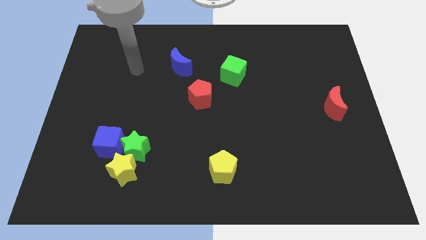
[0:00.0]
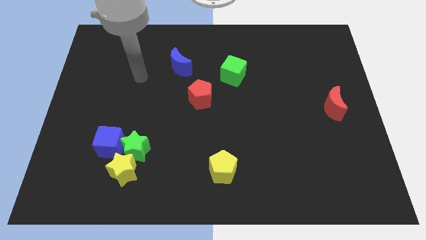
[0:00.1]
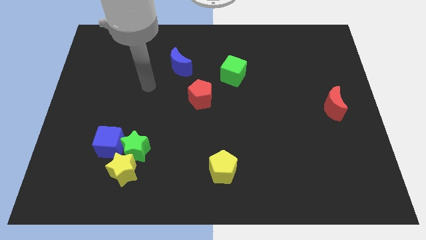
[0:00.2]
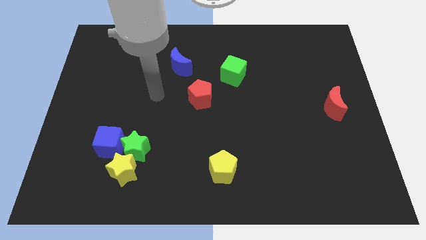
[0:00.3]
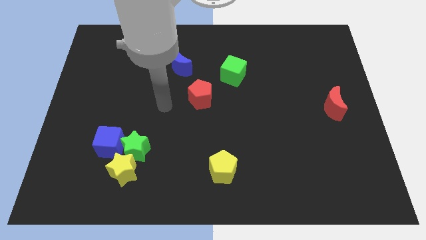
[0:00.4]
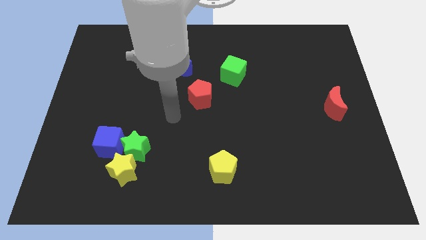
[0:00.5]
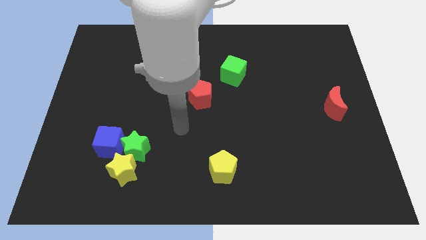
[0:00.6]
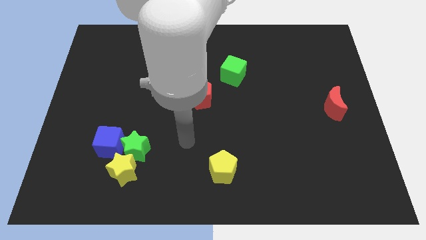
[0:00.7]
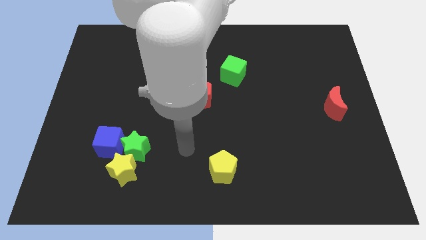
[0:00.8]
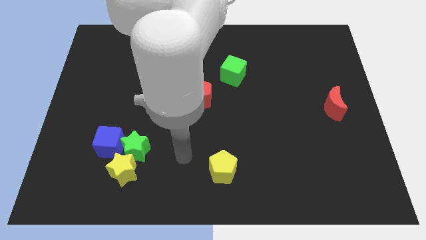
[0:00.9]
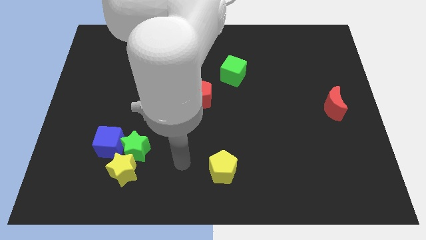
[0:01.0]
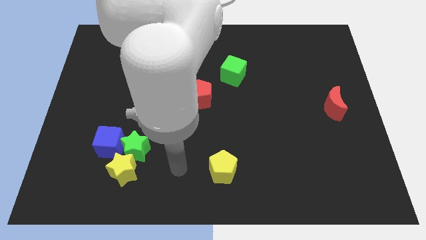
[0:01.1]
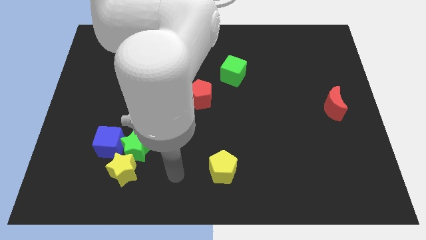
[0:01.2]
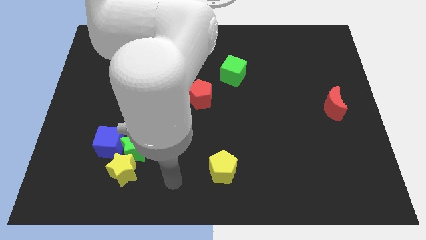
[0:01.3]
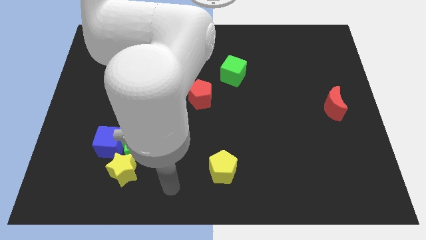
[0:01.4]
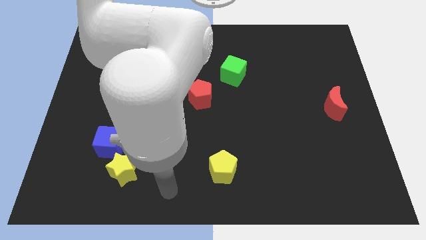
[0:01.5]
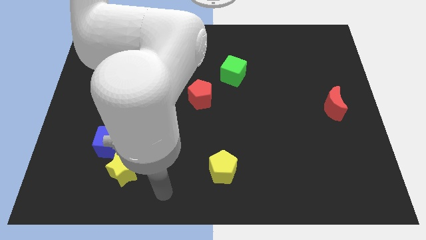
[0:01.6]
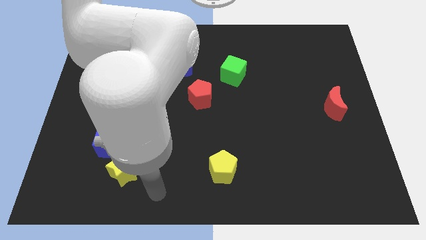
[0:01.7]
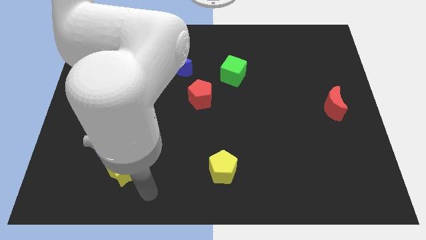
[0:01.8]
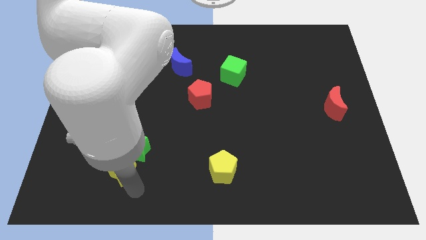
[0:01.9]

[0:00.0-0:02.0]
move your arm to the bottom of the yellow star

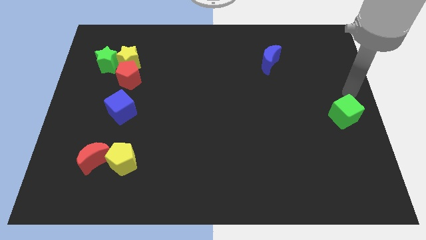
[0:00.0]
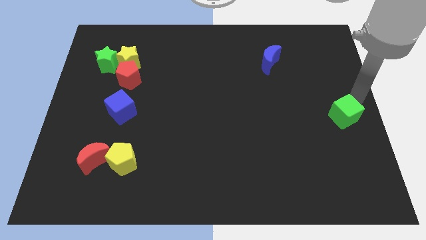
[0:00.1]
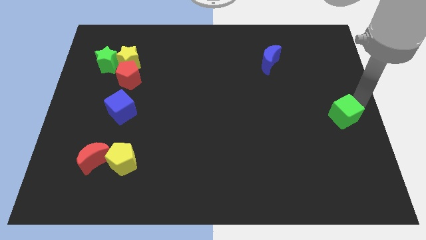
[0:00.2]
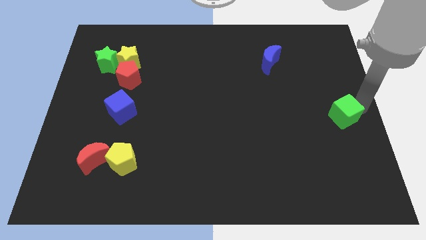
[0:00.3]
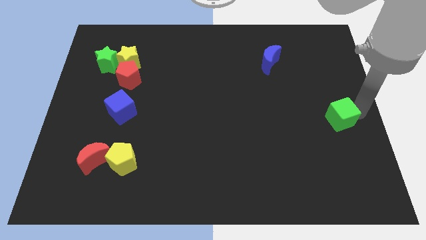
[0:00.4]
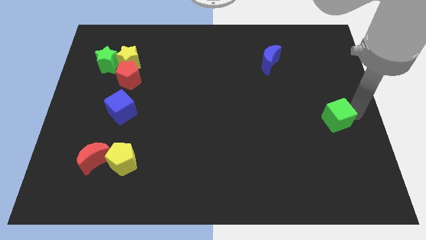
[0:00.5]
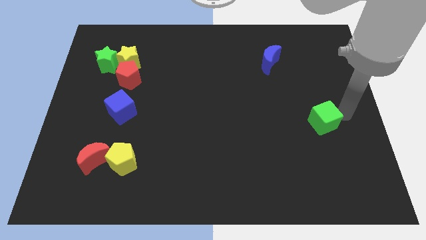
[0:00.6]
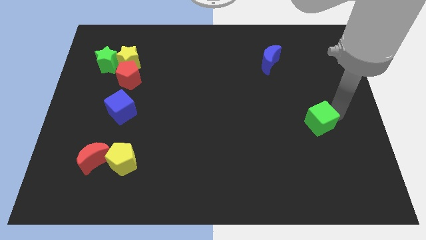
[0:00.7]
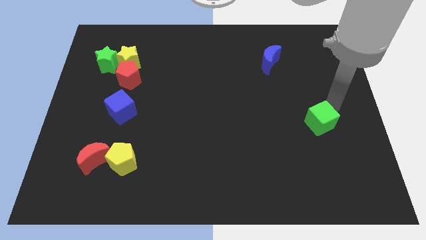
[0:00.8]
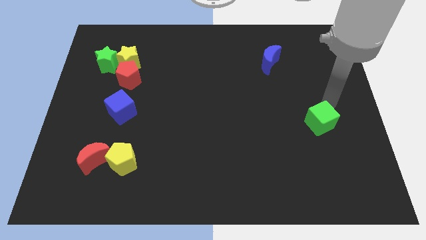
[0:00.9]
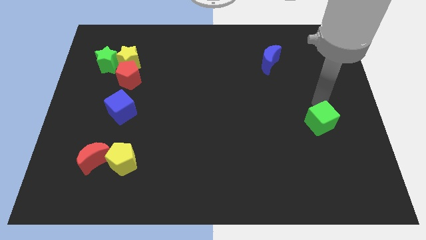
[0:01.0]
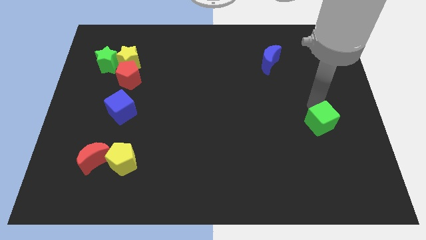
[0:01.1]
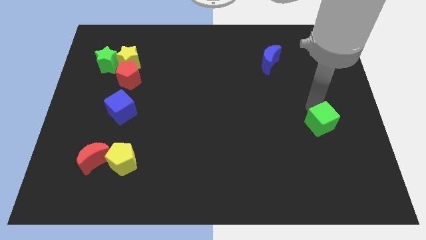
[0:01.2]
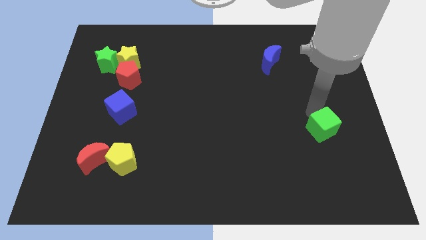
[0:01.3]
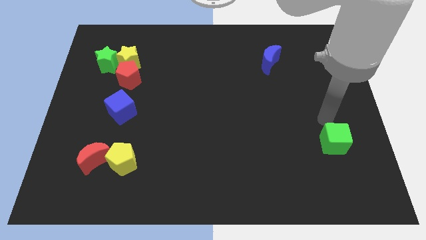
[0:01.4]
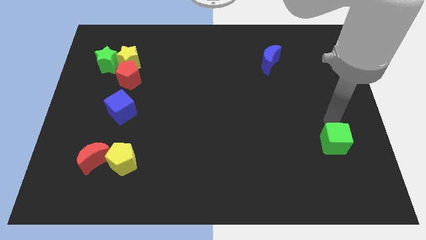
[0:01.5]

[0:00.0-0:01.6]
push the green cube slightly to the bottom

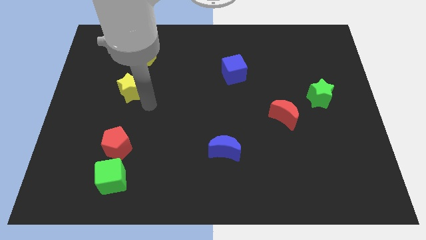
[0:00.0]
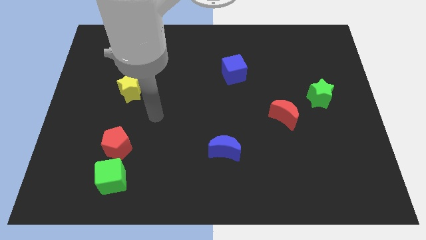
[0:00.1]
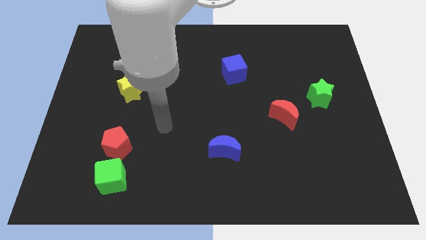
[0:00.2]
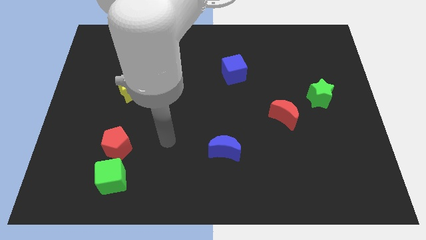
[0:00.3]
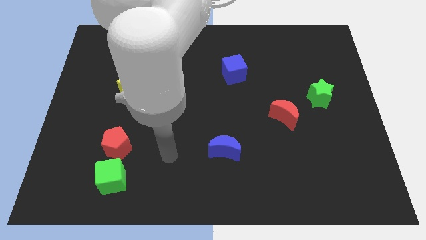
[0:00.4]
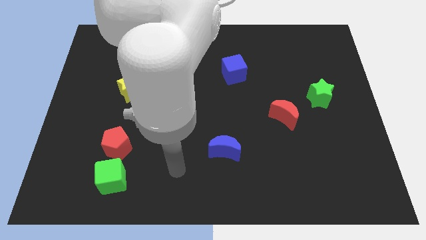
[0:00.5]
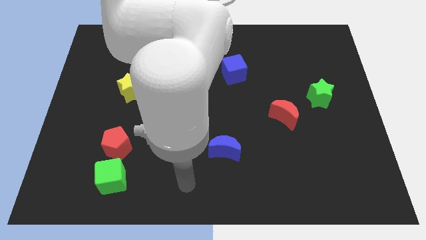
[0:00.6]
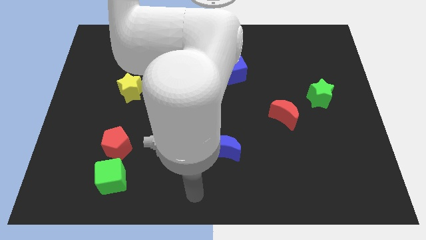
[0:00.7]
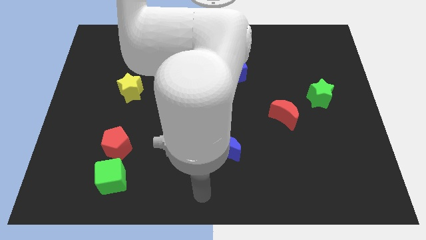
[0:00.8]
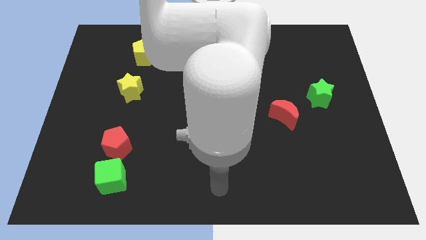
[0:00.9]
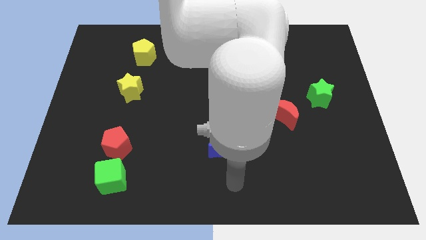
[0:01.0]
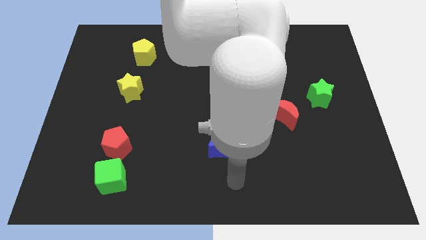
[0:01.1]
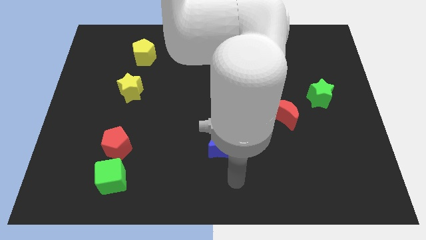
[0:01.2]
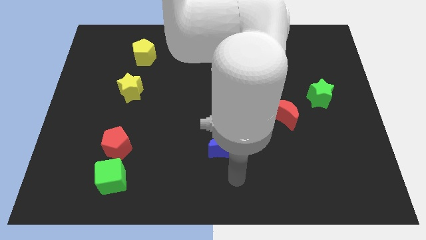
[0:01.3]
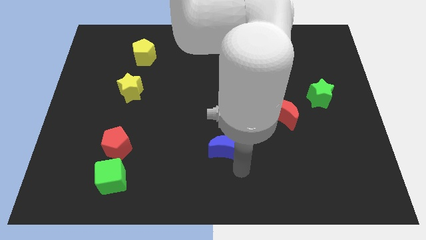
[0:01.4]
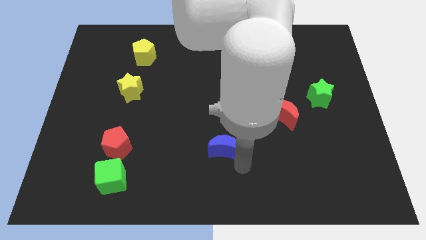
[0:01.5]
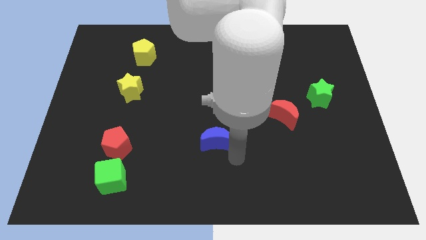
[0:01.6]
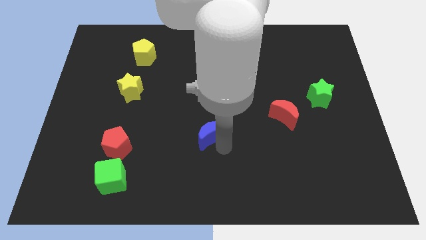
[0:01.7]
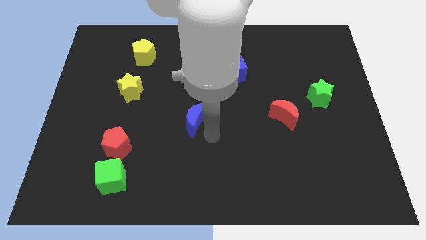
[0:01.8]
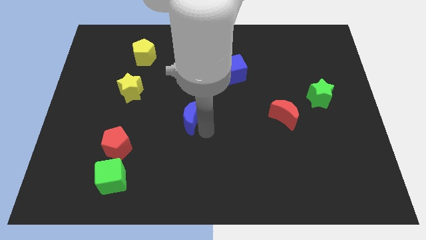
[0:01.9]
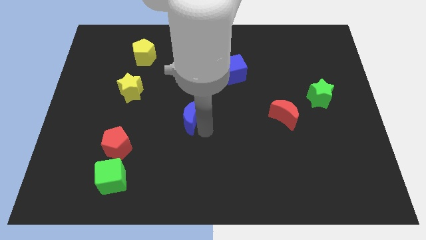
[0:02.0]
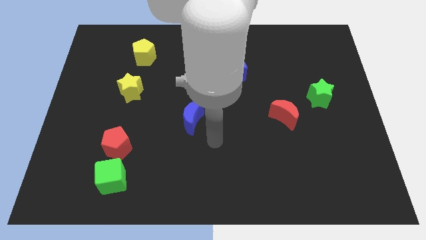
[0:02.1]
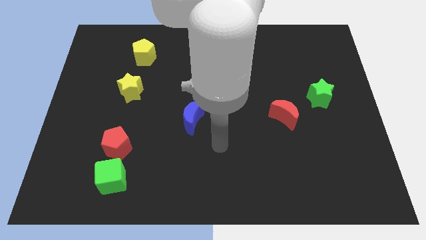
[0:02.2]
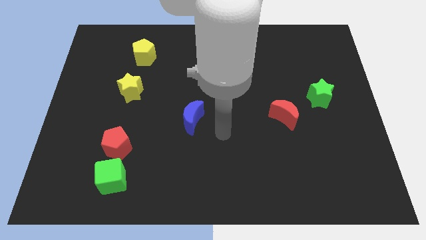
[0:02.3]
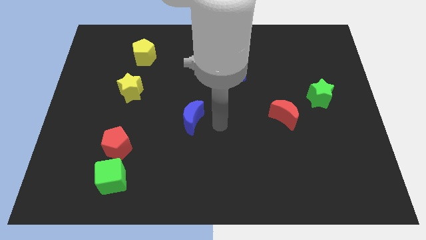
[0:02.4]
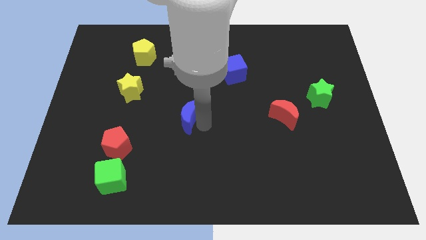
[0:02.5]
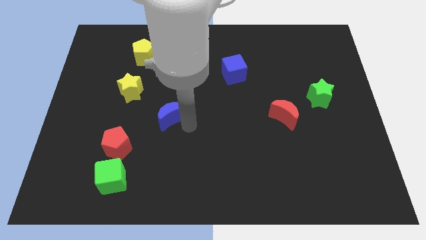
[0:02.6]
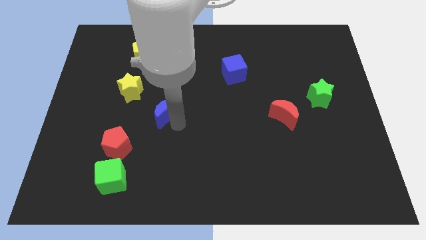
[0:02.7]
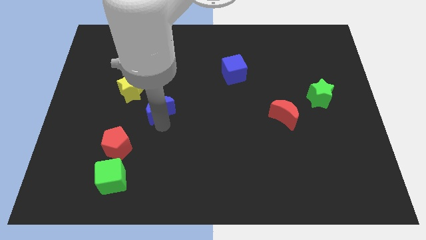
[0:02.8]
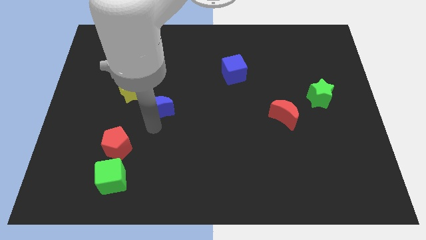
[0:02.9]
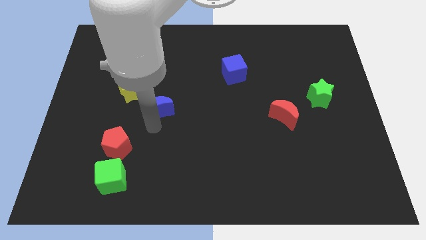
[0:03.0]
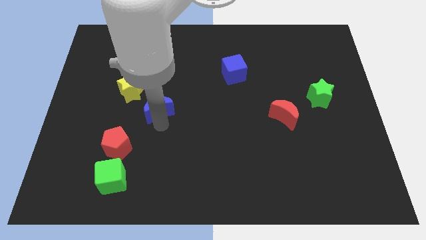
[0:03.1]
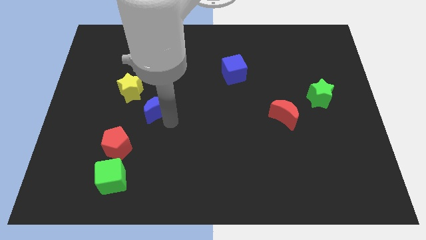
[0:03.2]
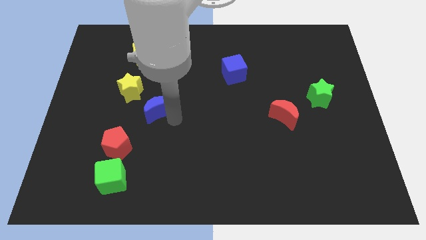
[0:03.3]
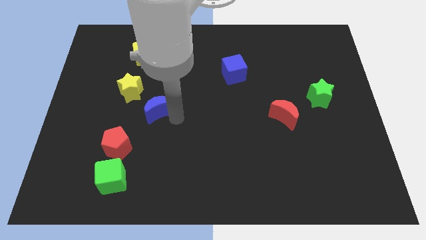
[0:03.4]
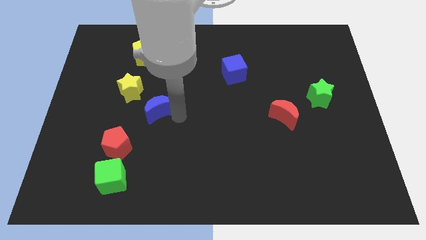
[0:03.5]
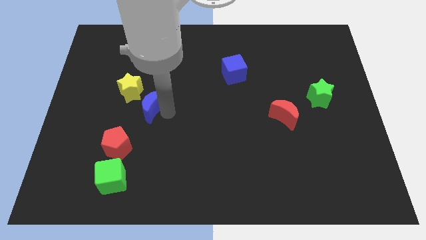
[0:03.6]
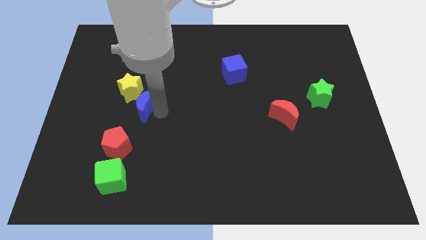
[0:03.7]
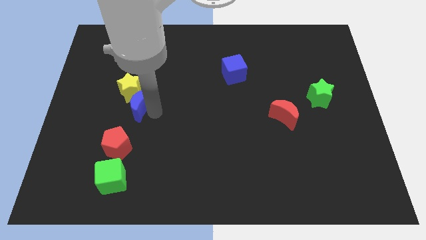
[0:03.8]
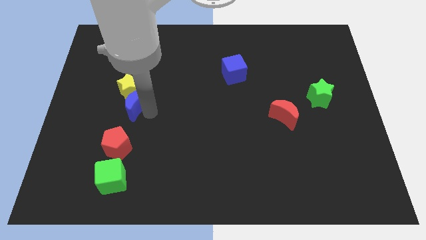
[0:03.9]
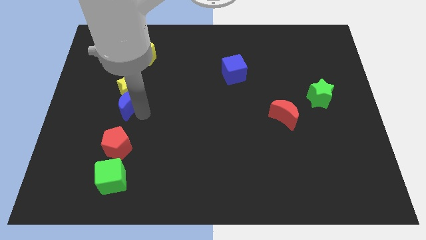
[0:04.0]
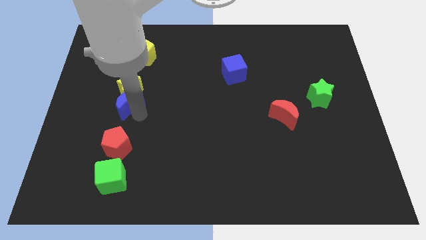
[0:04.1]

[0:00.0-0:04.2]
move the blue crescent to the bottom of th yellow star

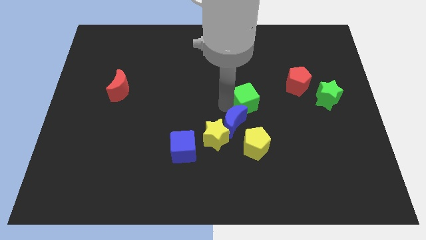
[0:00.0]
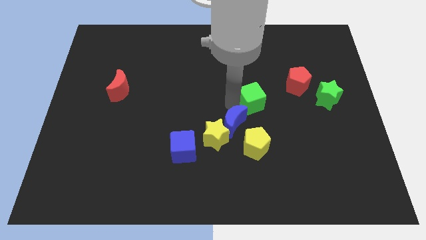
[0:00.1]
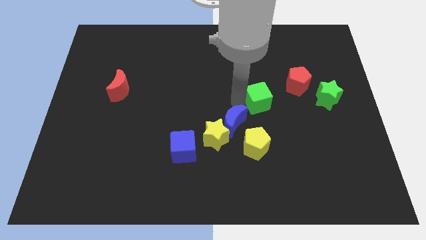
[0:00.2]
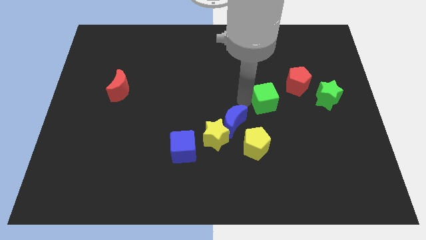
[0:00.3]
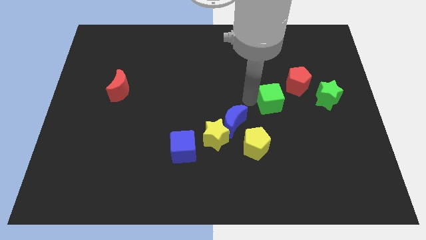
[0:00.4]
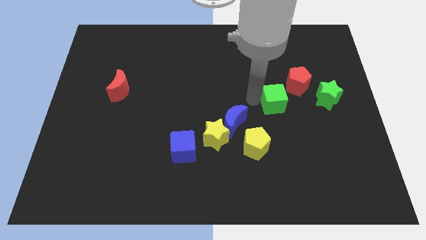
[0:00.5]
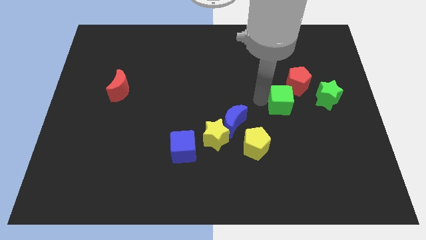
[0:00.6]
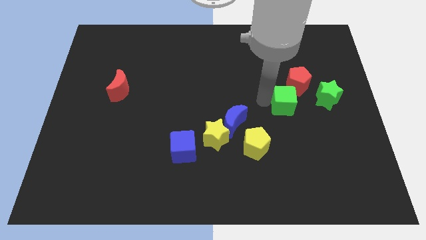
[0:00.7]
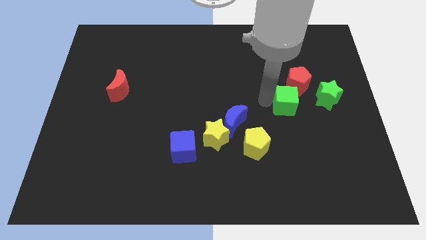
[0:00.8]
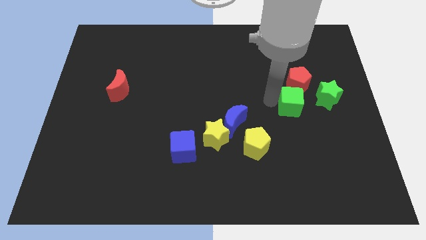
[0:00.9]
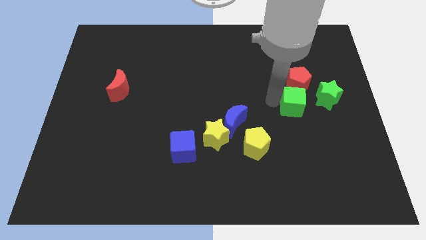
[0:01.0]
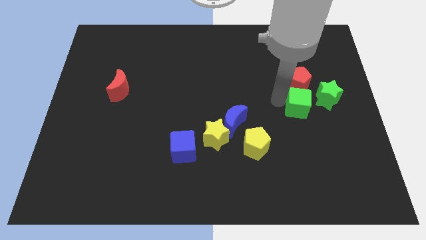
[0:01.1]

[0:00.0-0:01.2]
push the green cube to the bottom of the red pentagon

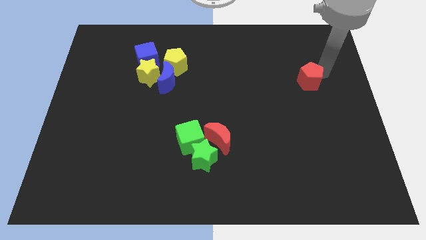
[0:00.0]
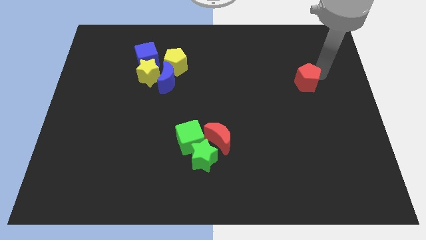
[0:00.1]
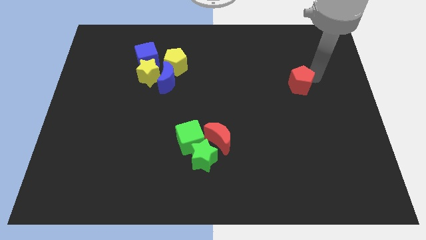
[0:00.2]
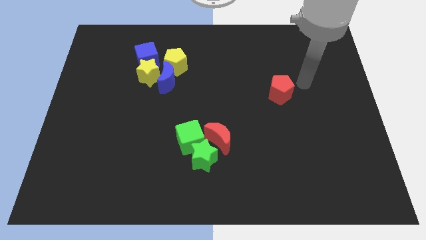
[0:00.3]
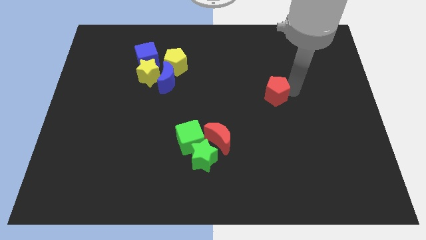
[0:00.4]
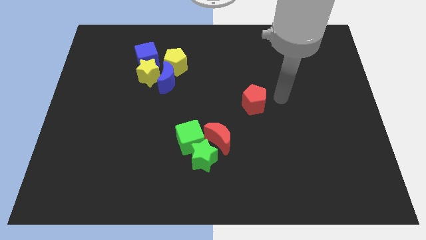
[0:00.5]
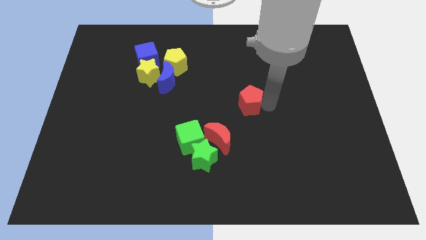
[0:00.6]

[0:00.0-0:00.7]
move the red pentagon to the center of the board
